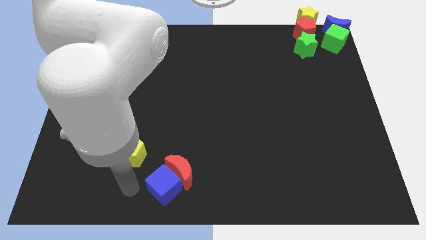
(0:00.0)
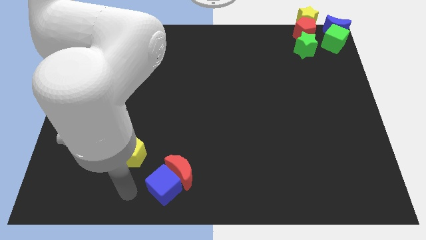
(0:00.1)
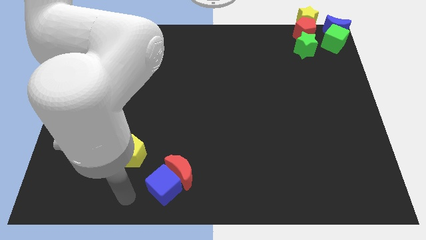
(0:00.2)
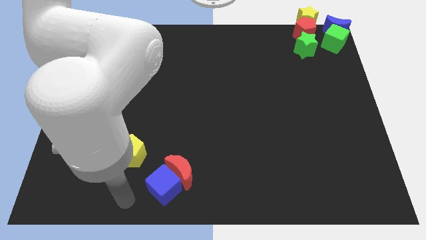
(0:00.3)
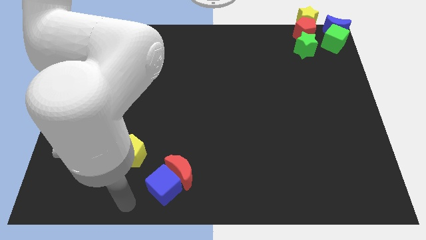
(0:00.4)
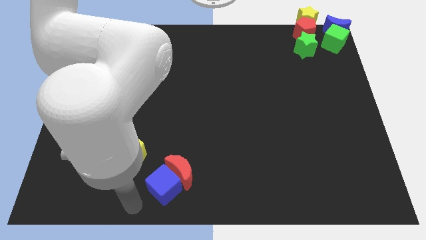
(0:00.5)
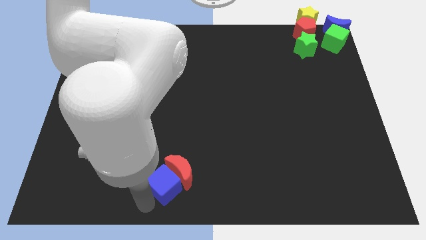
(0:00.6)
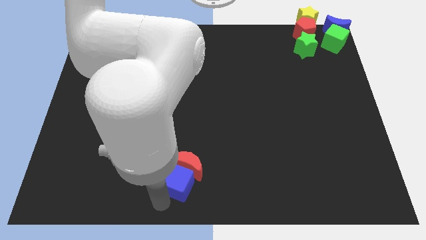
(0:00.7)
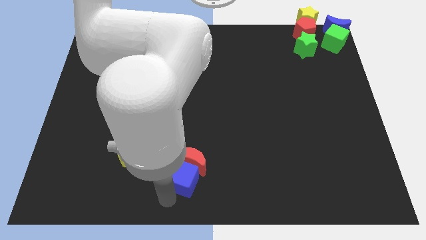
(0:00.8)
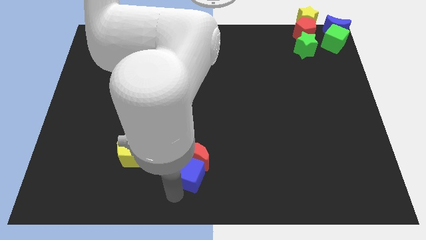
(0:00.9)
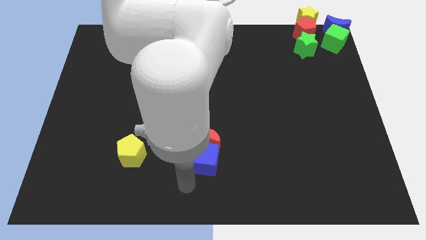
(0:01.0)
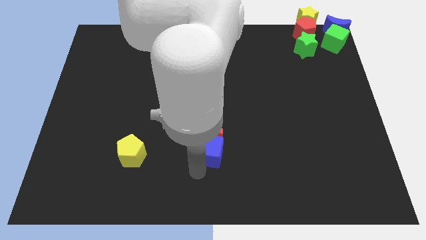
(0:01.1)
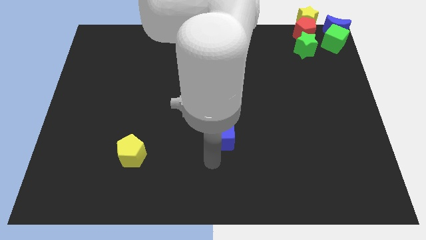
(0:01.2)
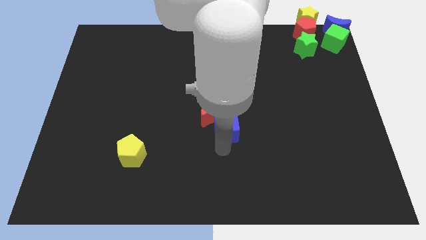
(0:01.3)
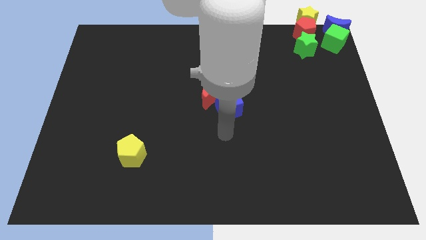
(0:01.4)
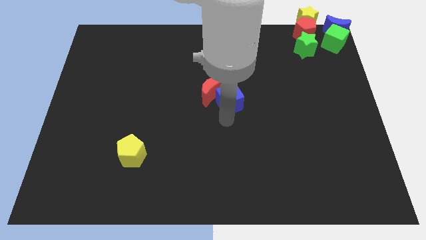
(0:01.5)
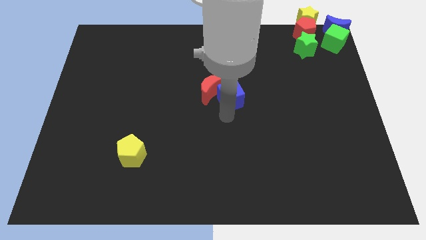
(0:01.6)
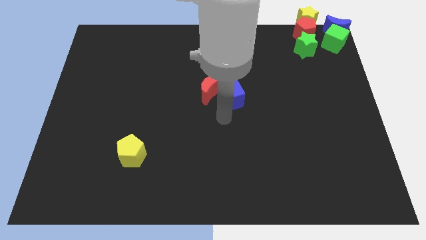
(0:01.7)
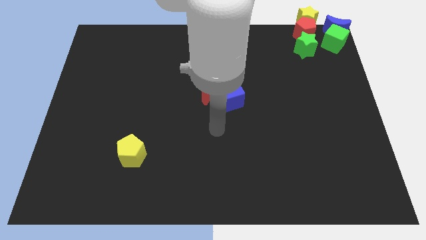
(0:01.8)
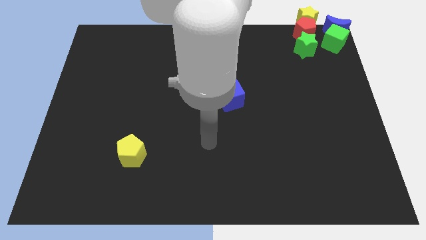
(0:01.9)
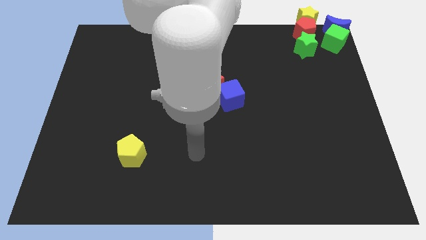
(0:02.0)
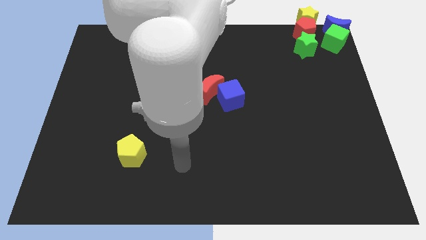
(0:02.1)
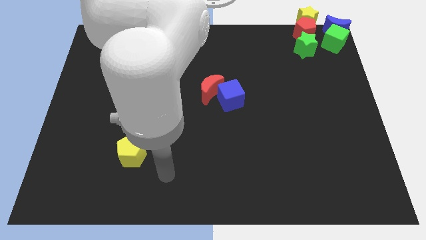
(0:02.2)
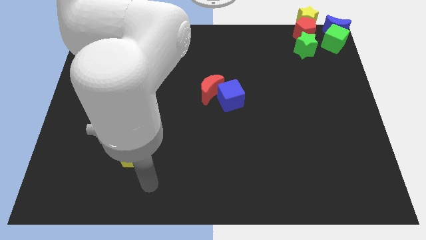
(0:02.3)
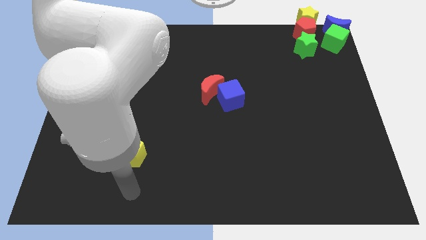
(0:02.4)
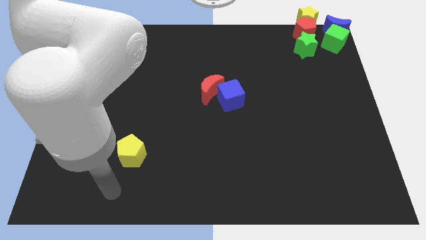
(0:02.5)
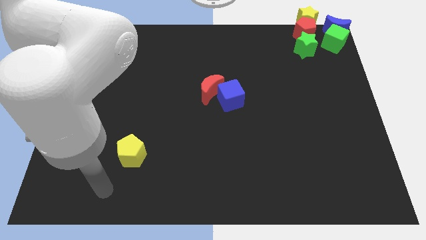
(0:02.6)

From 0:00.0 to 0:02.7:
move the blue cube with a red moon to the middle of the board

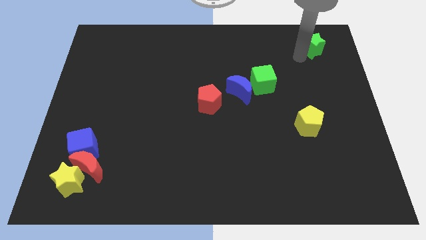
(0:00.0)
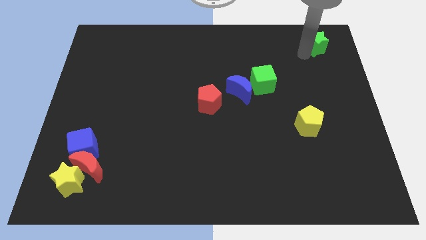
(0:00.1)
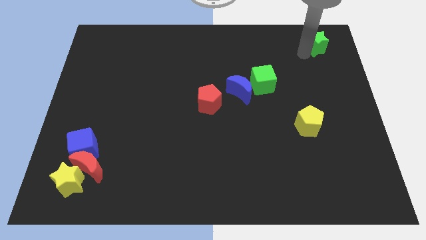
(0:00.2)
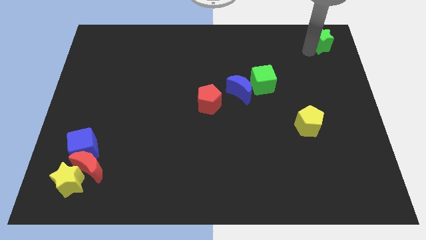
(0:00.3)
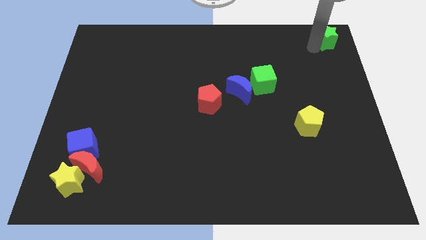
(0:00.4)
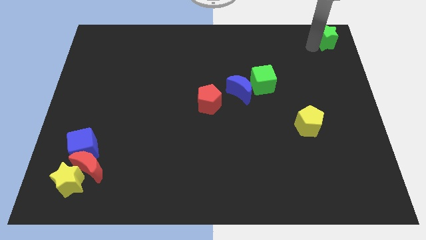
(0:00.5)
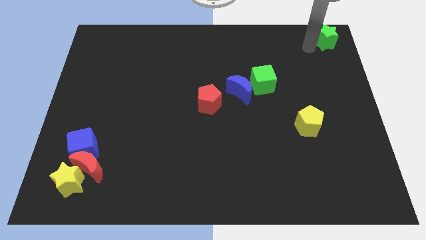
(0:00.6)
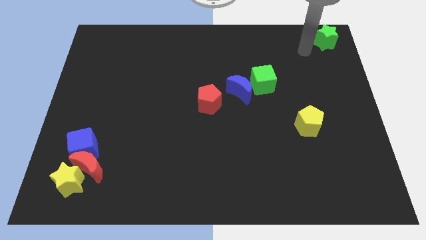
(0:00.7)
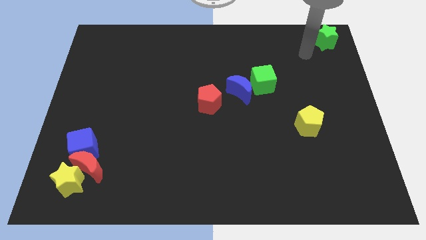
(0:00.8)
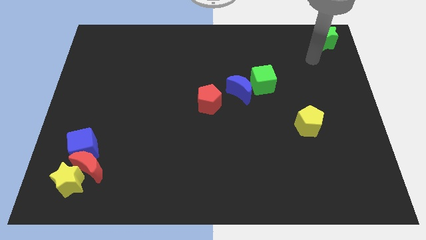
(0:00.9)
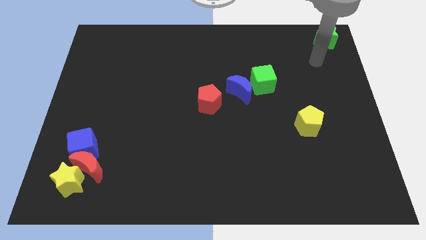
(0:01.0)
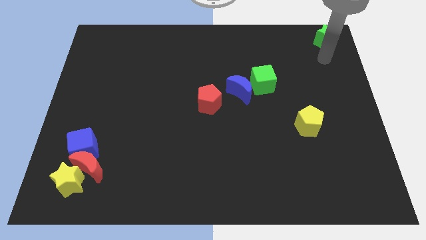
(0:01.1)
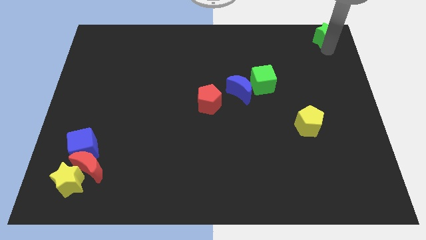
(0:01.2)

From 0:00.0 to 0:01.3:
push the green star to the top right corner of the board

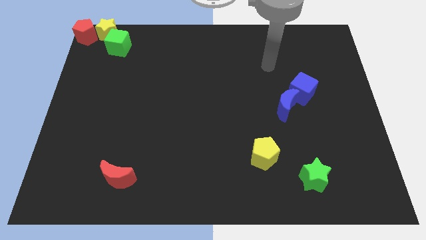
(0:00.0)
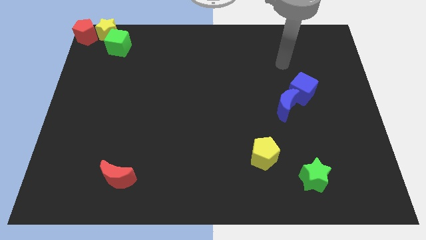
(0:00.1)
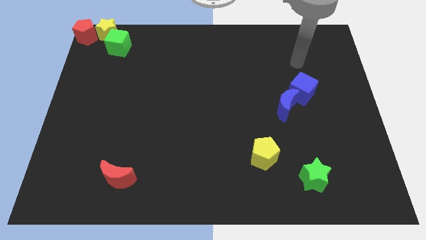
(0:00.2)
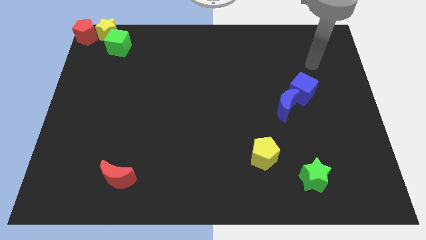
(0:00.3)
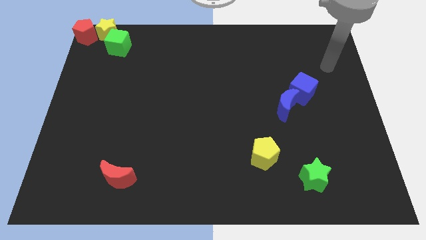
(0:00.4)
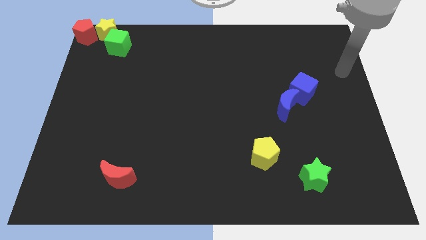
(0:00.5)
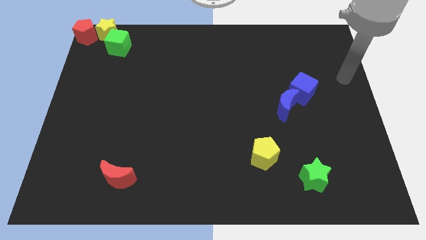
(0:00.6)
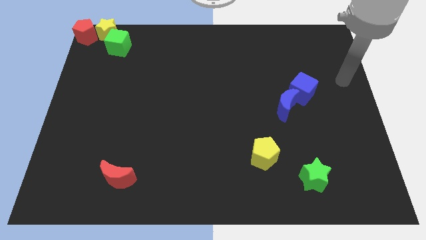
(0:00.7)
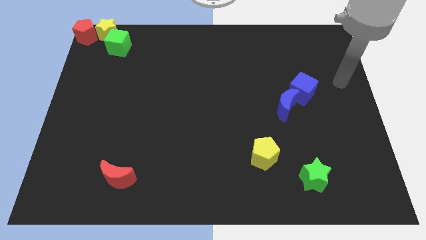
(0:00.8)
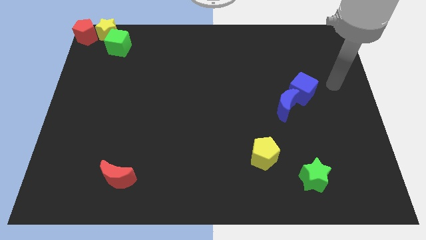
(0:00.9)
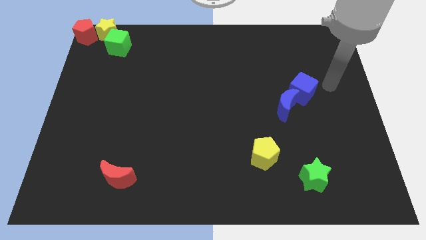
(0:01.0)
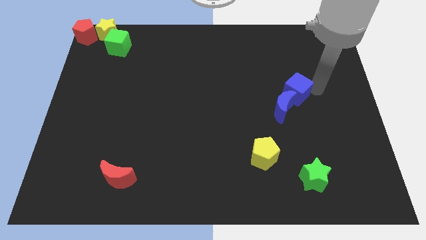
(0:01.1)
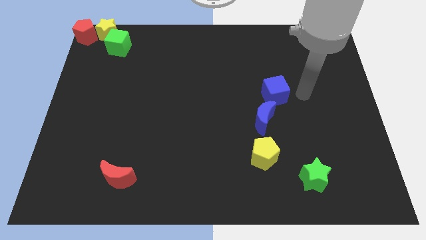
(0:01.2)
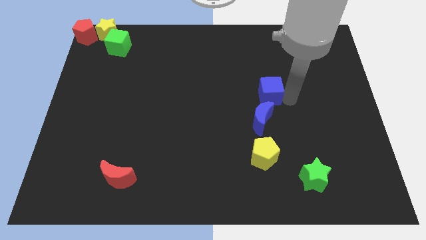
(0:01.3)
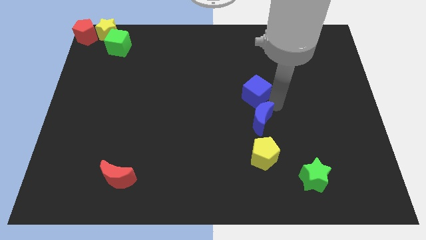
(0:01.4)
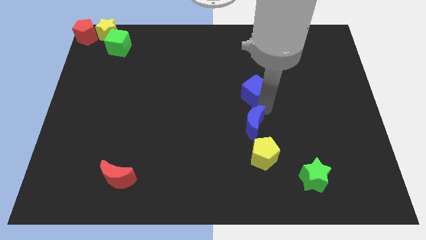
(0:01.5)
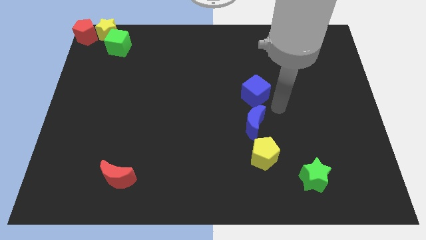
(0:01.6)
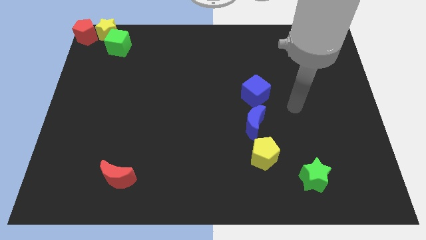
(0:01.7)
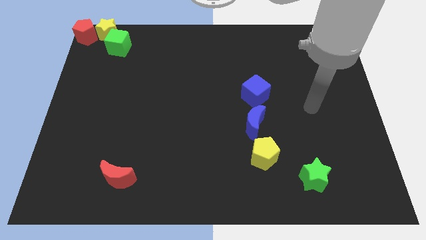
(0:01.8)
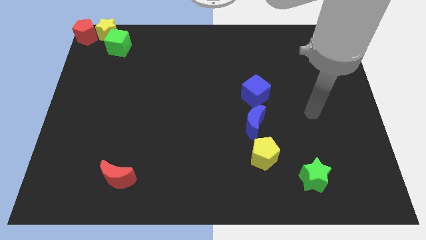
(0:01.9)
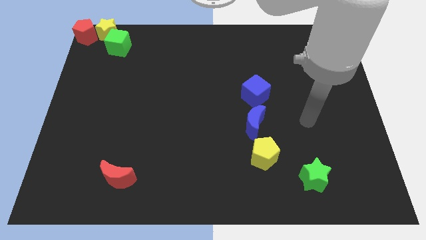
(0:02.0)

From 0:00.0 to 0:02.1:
place the blue moon in between the blue cube and yellow pentagon vertically

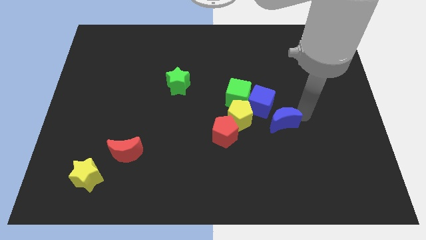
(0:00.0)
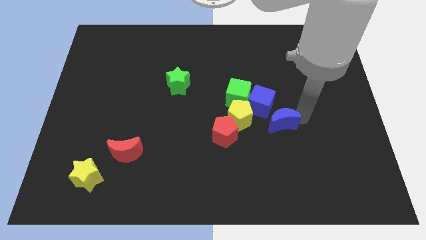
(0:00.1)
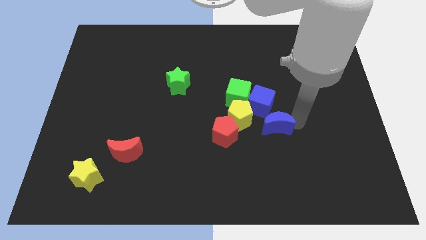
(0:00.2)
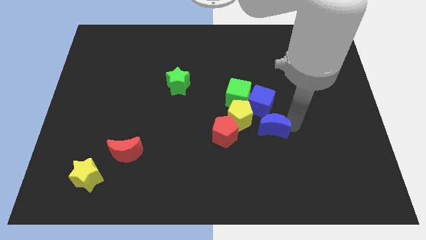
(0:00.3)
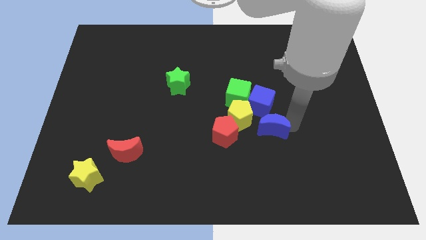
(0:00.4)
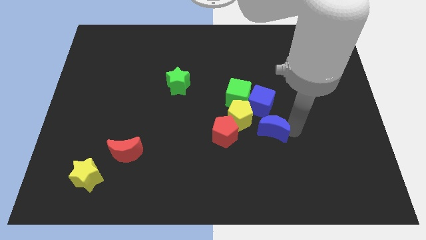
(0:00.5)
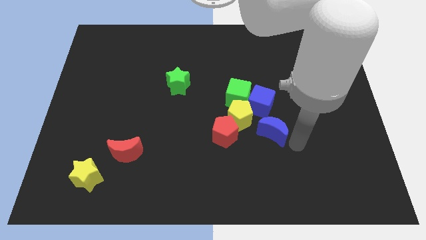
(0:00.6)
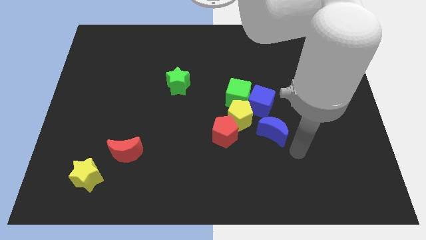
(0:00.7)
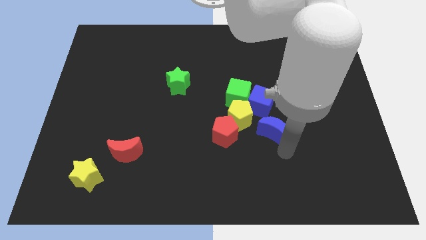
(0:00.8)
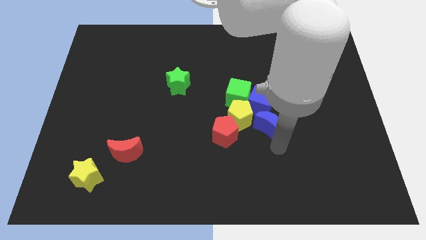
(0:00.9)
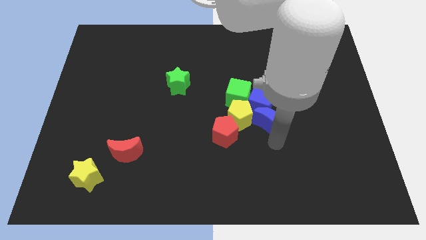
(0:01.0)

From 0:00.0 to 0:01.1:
slide the blue moon at the bottom of blue cube

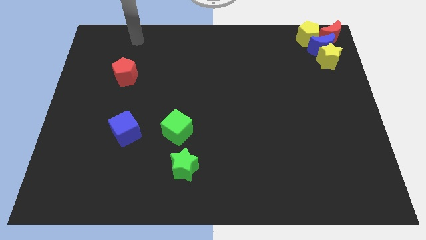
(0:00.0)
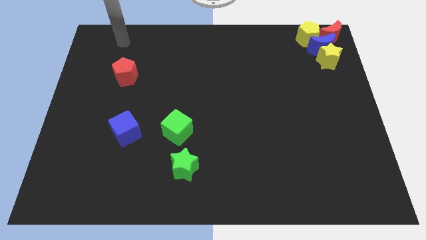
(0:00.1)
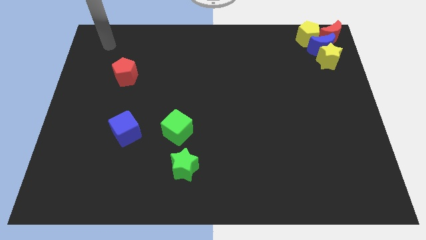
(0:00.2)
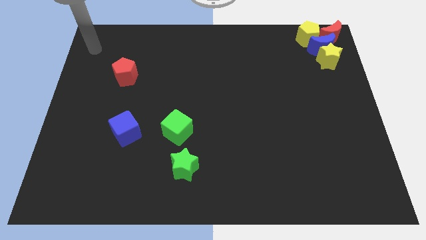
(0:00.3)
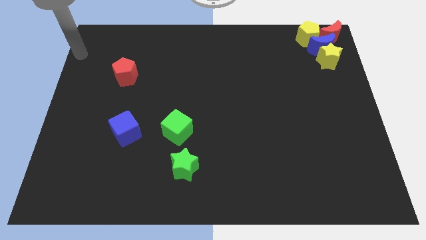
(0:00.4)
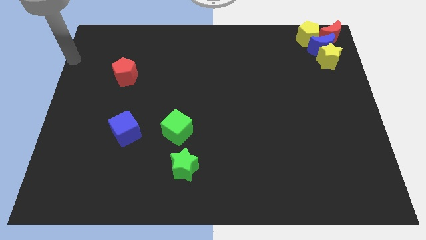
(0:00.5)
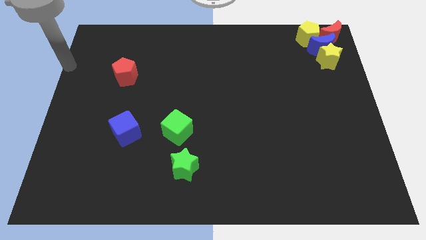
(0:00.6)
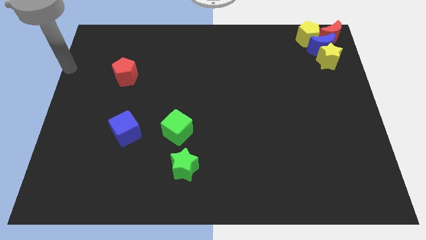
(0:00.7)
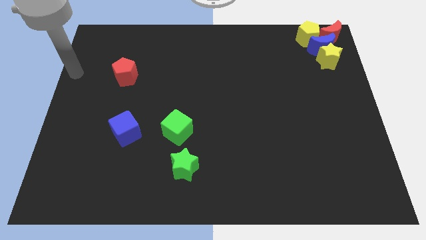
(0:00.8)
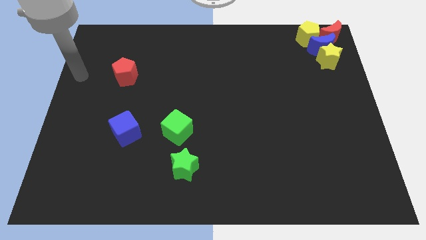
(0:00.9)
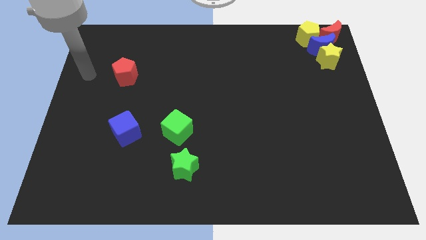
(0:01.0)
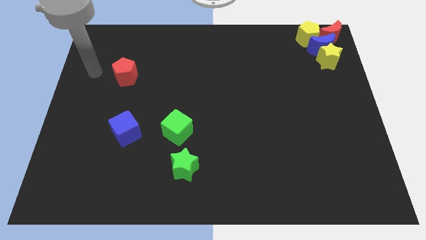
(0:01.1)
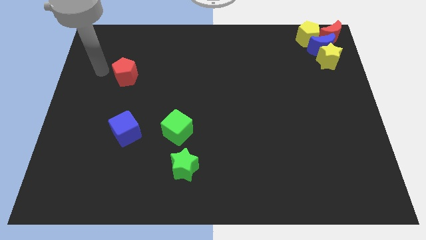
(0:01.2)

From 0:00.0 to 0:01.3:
place your arm at the left of the red pentagon

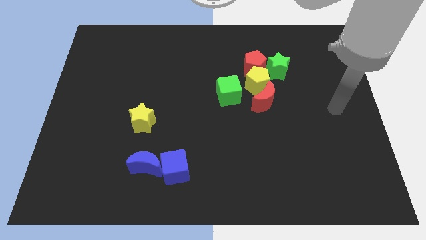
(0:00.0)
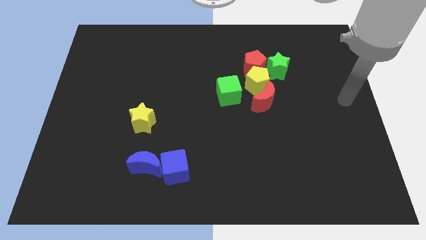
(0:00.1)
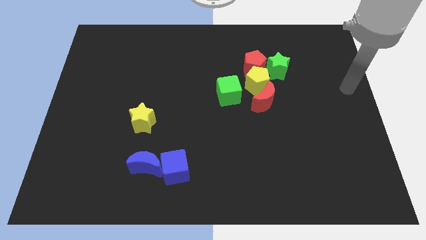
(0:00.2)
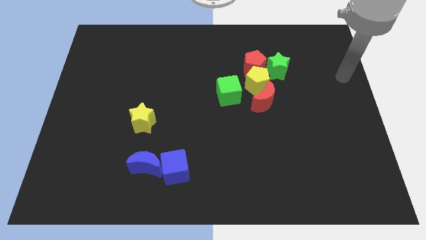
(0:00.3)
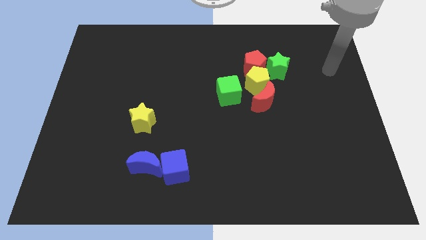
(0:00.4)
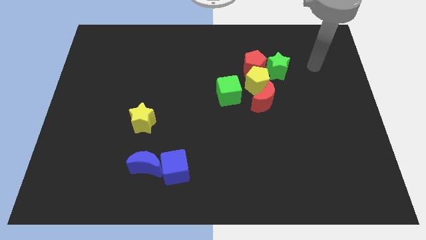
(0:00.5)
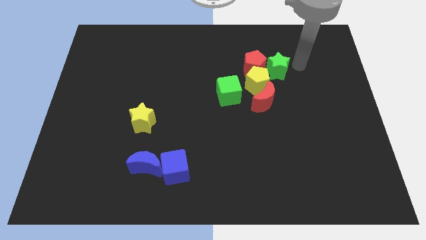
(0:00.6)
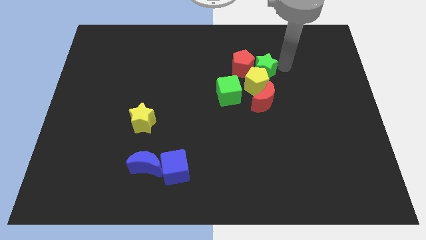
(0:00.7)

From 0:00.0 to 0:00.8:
move the arm to the right side of the green star
